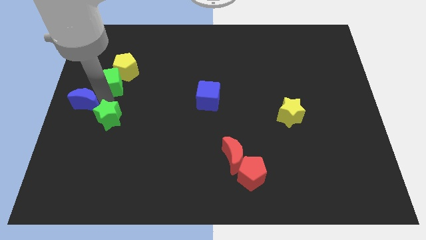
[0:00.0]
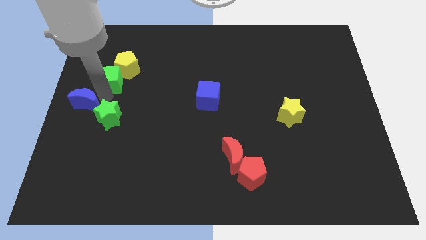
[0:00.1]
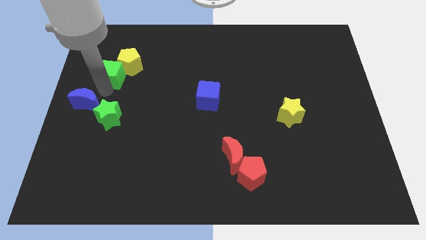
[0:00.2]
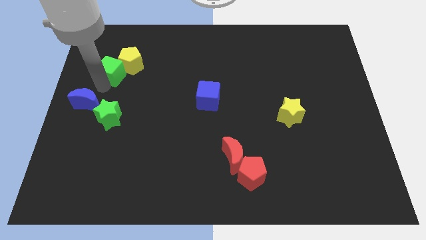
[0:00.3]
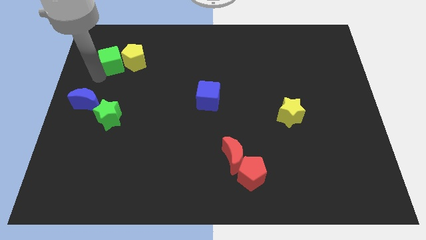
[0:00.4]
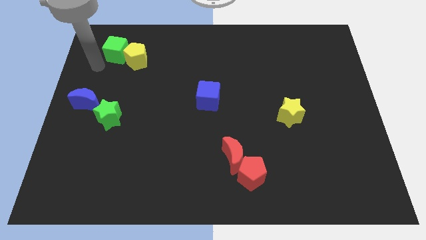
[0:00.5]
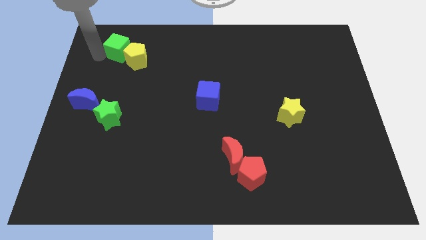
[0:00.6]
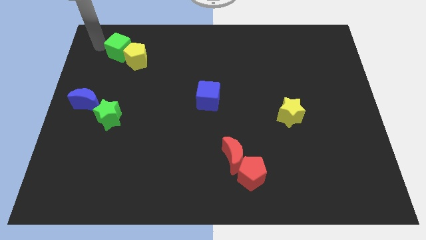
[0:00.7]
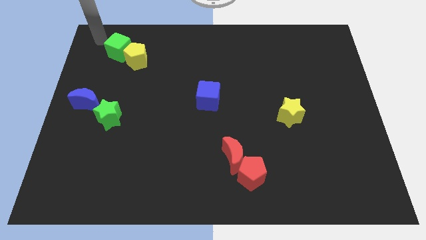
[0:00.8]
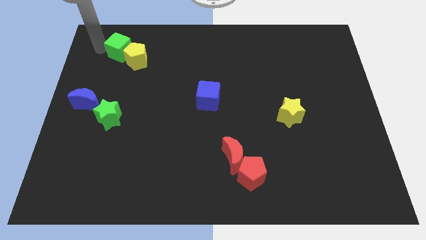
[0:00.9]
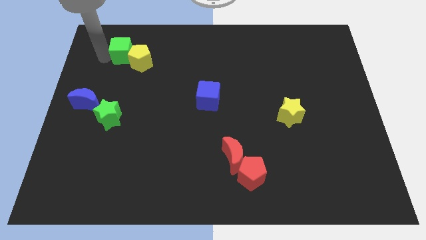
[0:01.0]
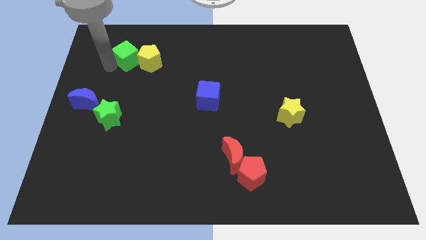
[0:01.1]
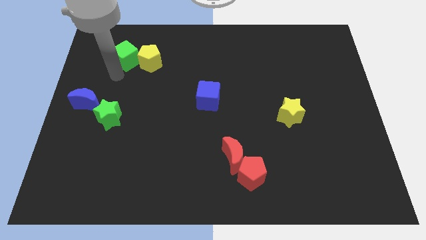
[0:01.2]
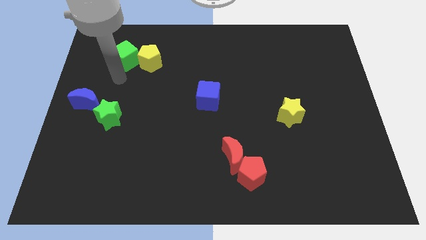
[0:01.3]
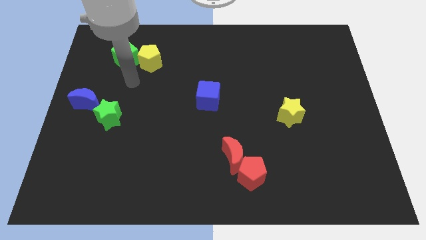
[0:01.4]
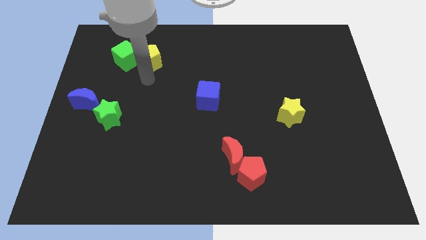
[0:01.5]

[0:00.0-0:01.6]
move the green cube along with the yellow pentagon towards top side

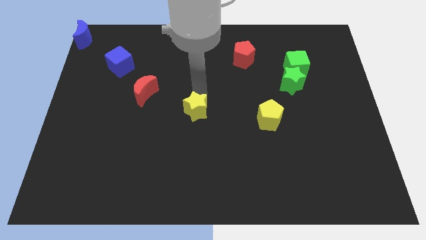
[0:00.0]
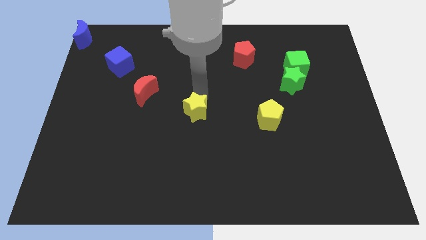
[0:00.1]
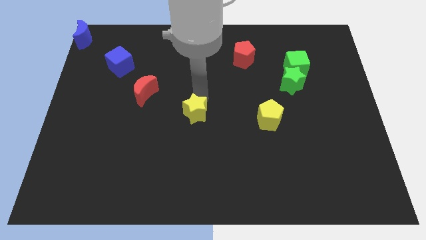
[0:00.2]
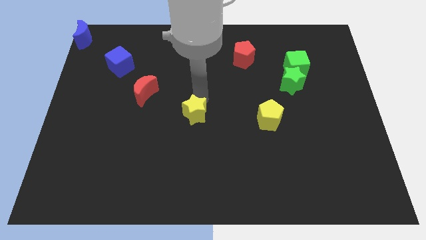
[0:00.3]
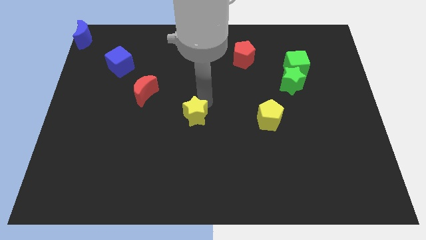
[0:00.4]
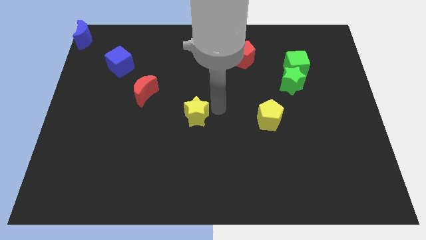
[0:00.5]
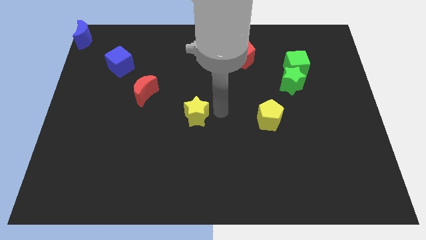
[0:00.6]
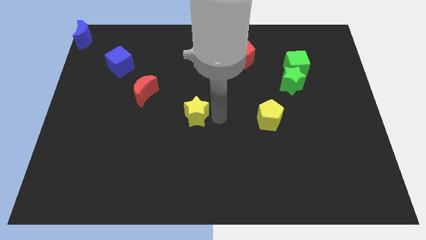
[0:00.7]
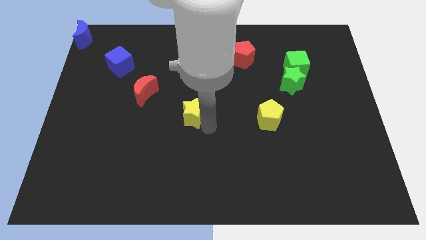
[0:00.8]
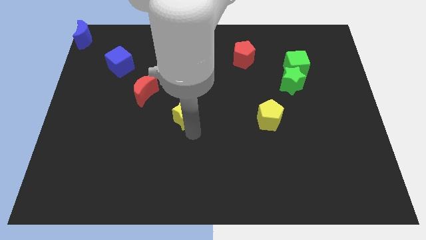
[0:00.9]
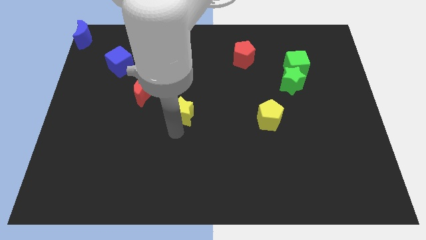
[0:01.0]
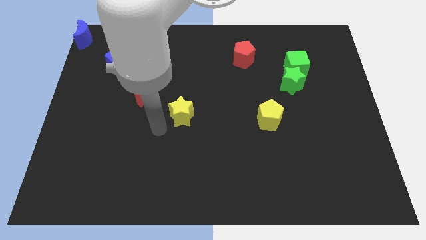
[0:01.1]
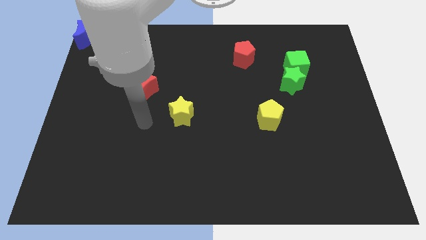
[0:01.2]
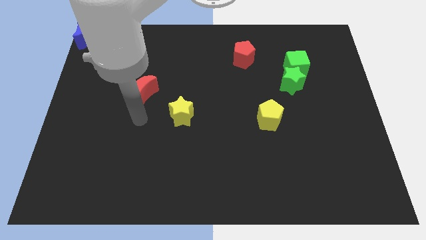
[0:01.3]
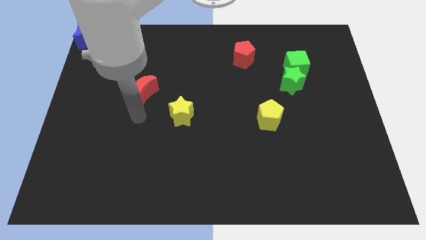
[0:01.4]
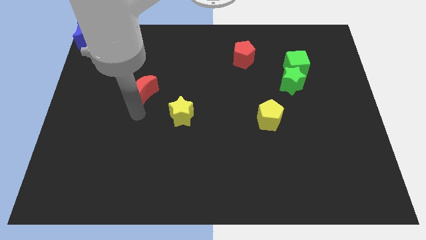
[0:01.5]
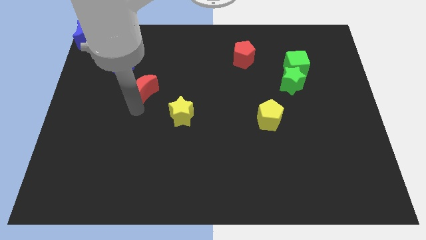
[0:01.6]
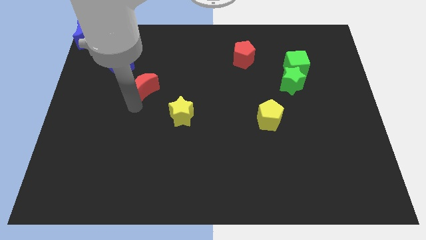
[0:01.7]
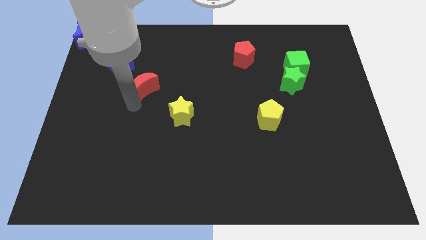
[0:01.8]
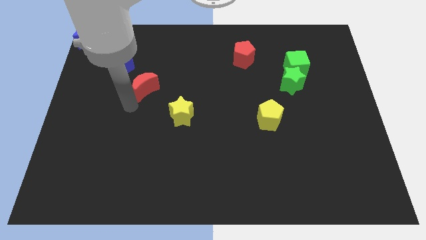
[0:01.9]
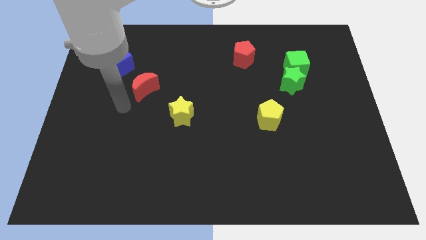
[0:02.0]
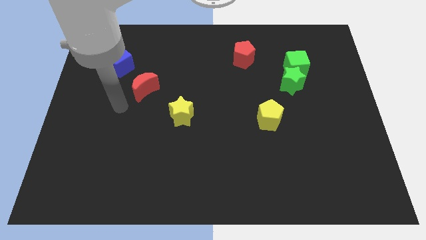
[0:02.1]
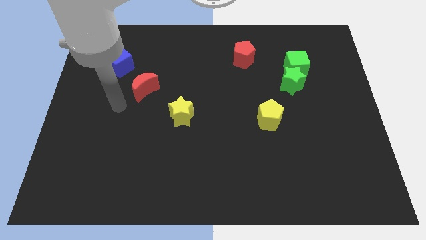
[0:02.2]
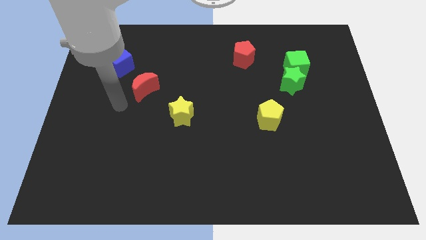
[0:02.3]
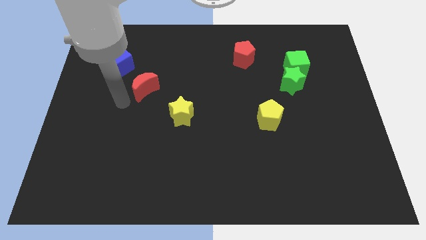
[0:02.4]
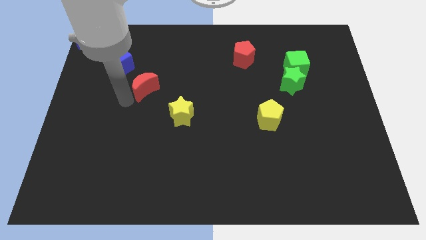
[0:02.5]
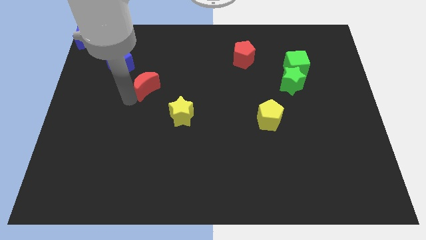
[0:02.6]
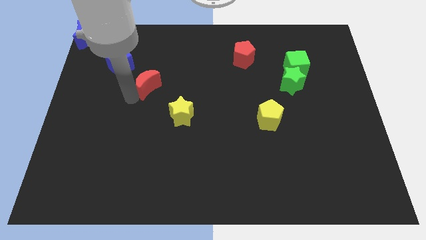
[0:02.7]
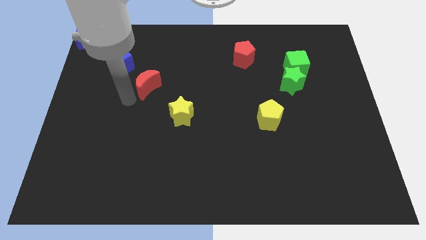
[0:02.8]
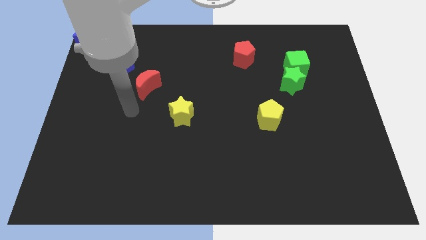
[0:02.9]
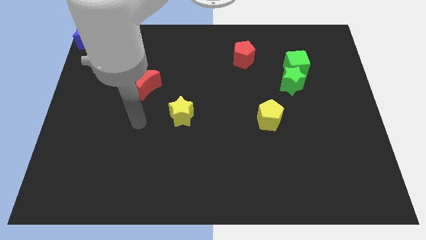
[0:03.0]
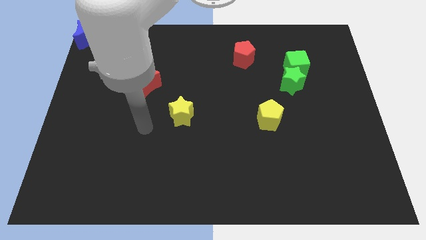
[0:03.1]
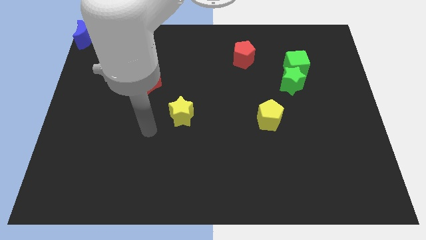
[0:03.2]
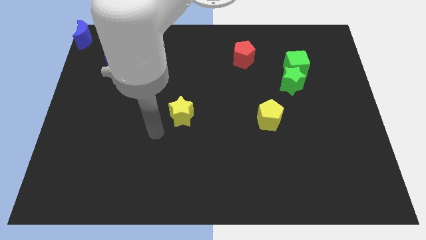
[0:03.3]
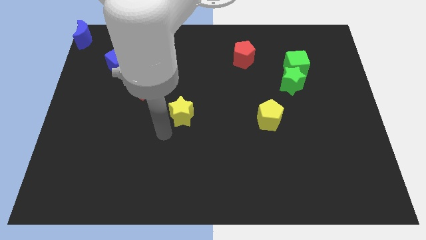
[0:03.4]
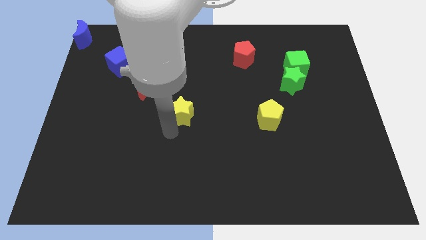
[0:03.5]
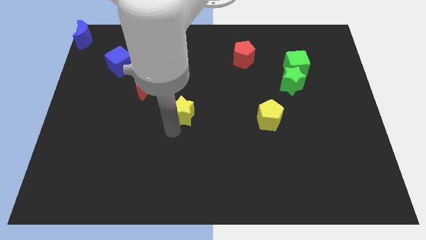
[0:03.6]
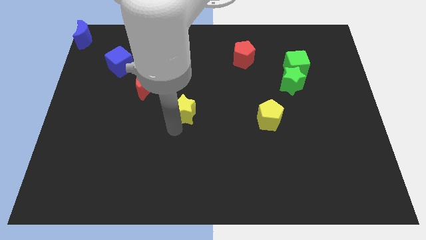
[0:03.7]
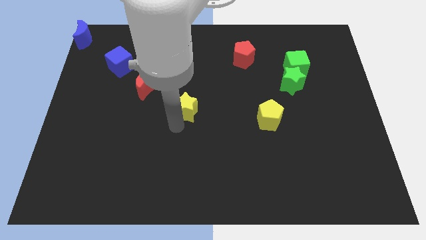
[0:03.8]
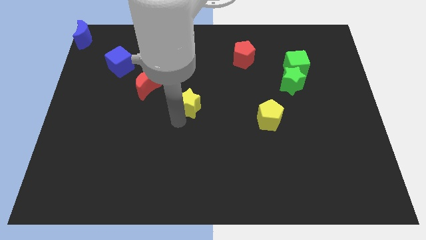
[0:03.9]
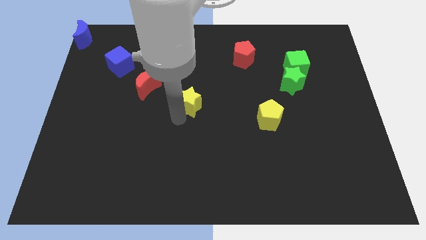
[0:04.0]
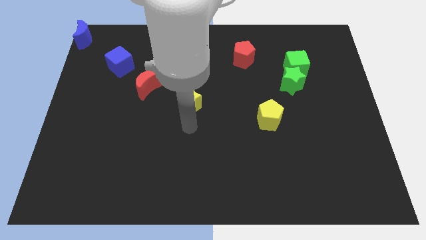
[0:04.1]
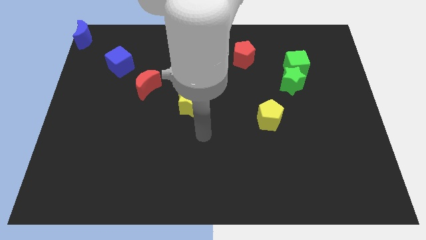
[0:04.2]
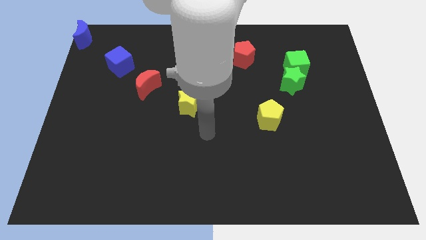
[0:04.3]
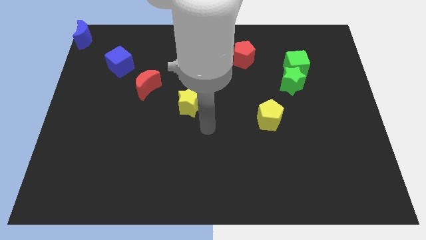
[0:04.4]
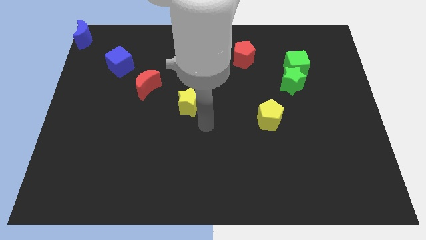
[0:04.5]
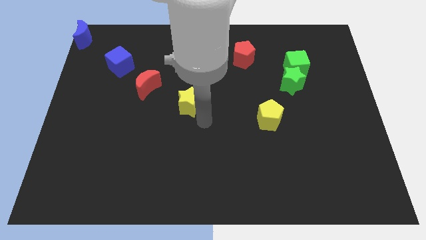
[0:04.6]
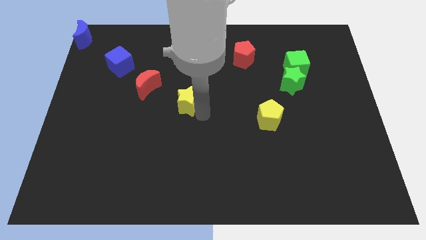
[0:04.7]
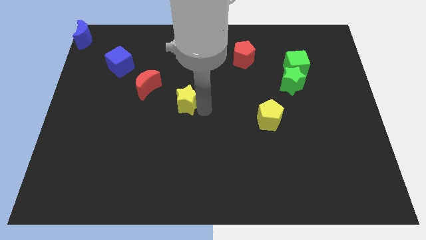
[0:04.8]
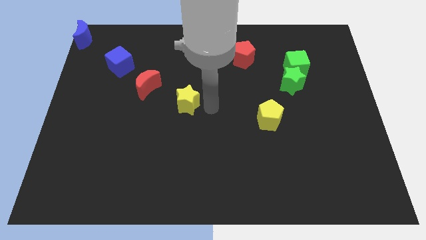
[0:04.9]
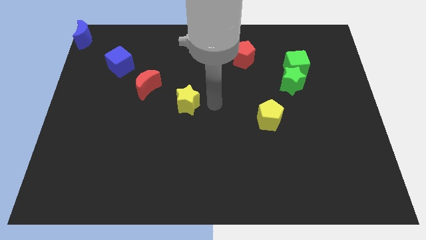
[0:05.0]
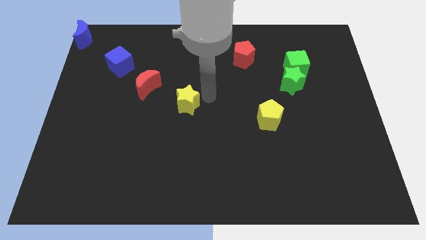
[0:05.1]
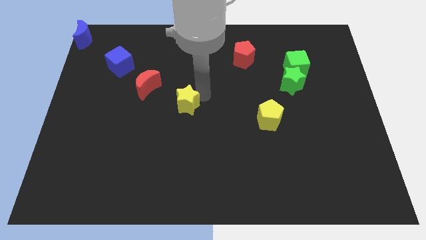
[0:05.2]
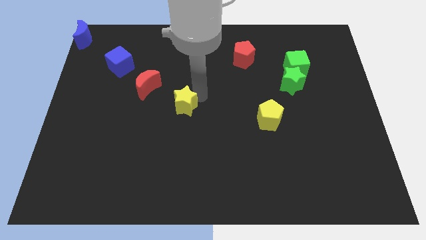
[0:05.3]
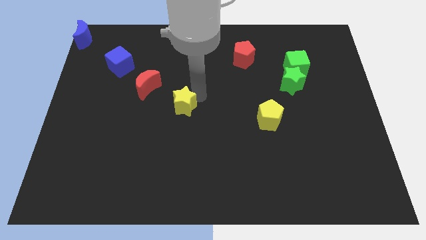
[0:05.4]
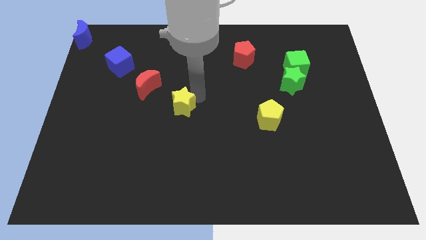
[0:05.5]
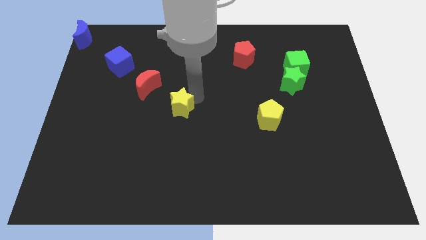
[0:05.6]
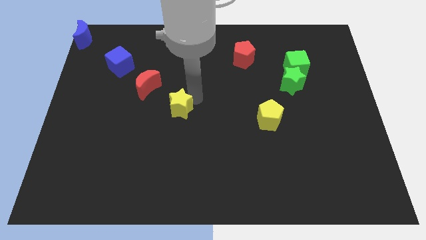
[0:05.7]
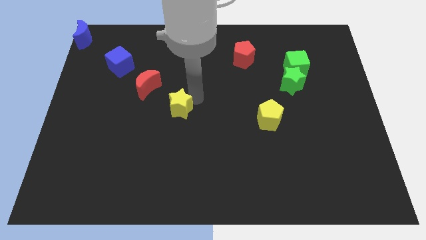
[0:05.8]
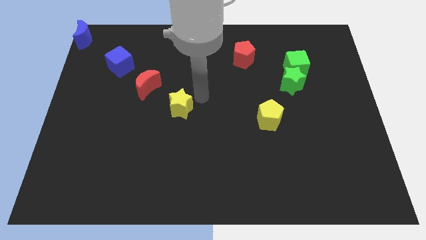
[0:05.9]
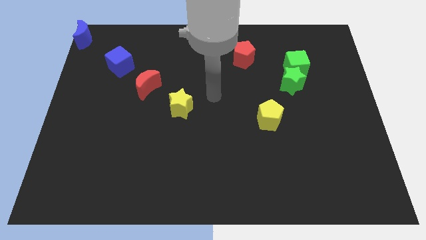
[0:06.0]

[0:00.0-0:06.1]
arrange the yellow star and red crescent diagonally bottom of the blue cube

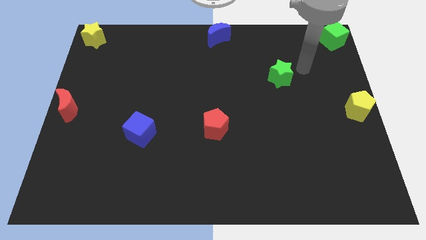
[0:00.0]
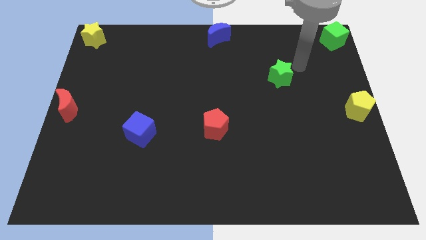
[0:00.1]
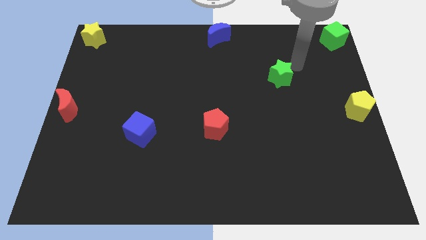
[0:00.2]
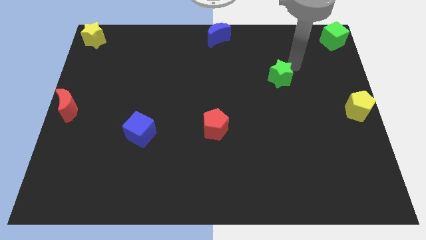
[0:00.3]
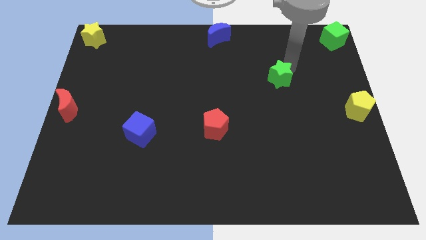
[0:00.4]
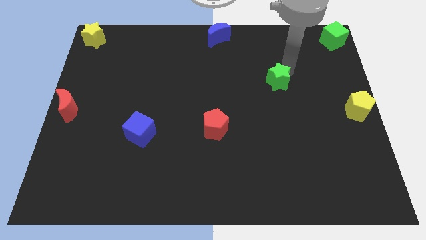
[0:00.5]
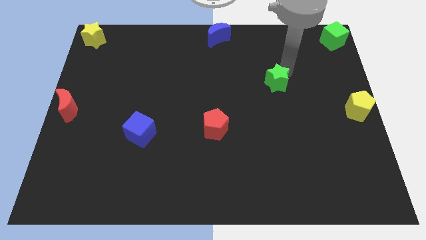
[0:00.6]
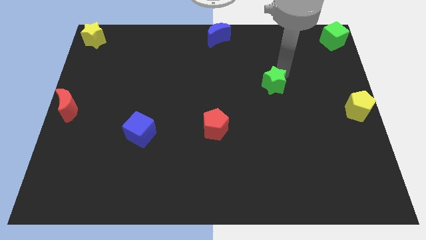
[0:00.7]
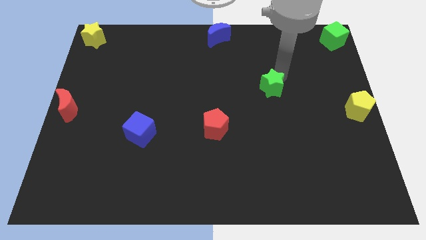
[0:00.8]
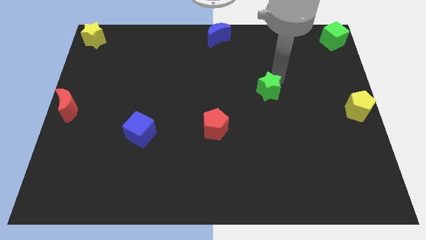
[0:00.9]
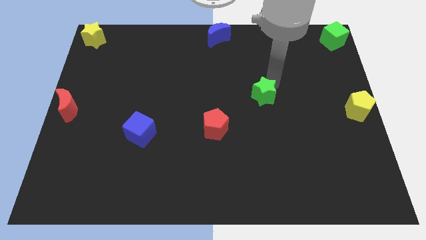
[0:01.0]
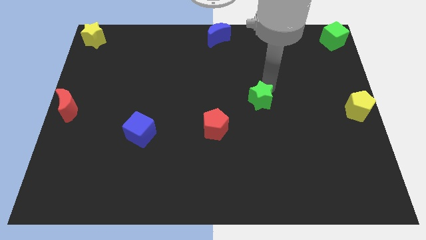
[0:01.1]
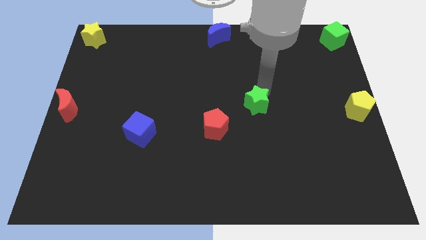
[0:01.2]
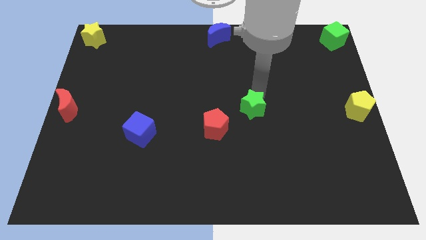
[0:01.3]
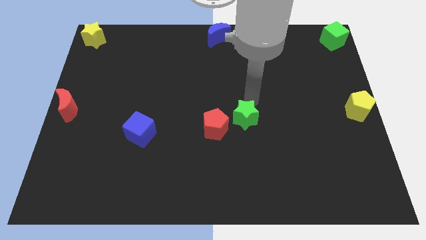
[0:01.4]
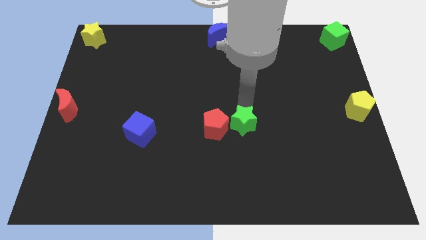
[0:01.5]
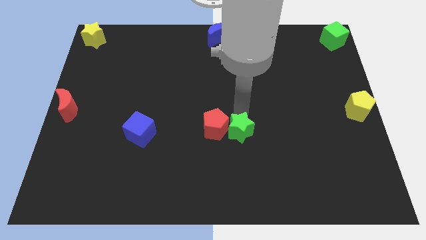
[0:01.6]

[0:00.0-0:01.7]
push the green star towards the red pentagon
